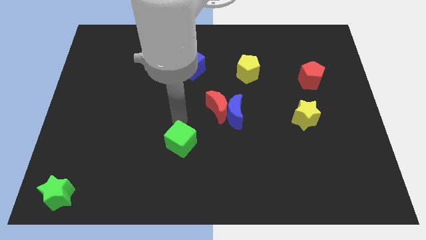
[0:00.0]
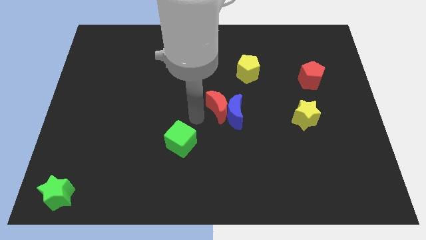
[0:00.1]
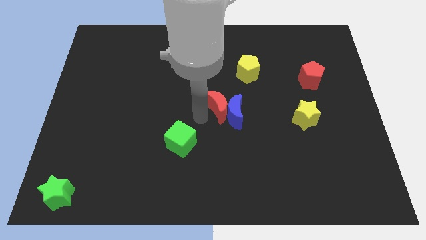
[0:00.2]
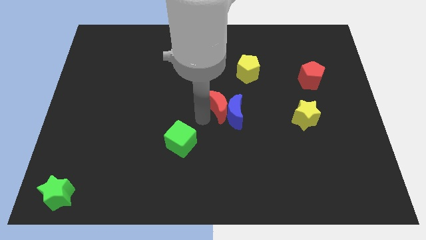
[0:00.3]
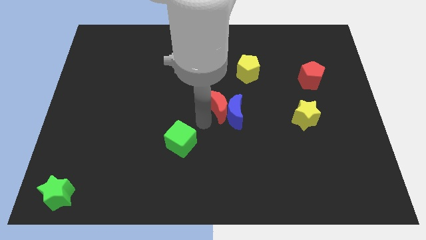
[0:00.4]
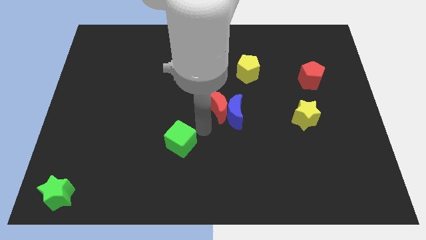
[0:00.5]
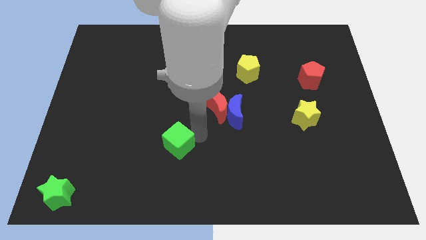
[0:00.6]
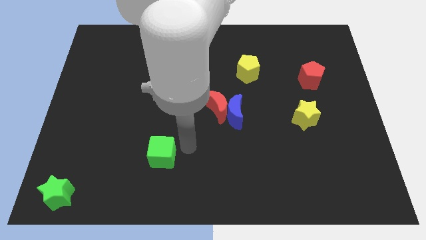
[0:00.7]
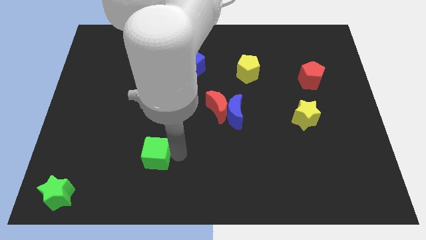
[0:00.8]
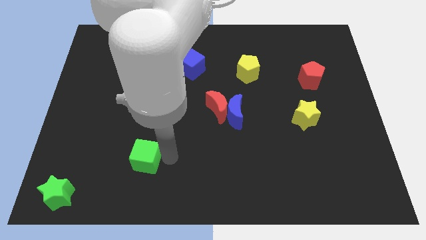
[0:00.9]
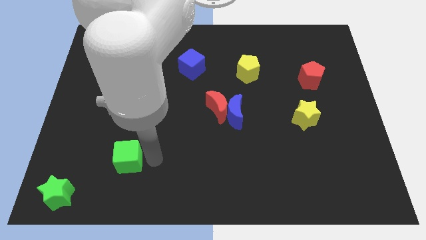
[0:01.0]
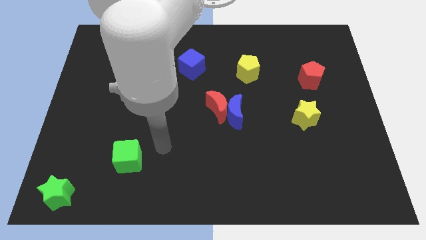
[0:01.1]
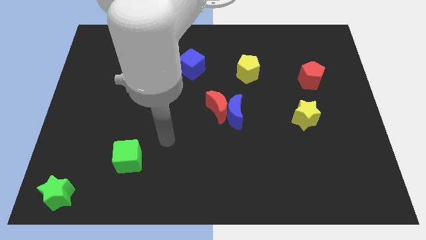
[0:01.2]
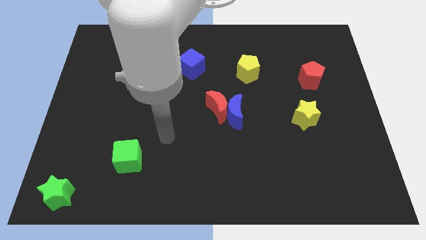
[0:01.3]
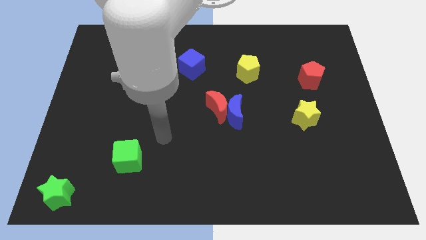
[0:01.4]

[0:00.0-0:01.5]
push the green cube diagonal to green star

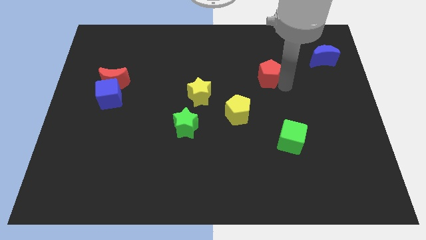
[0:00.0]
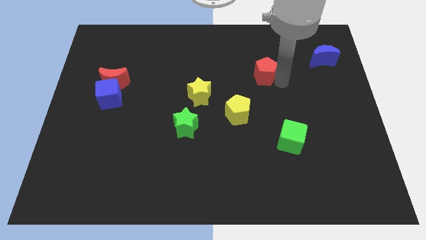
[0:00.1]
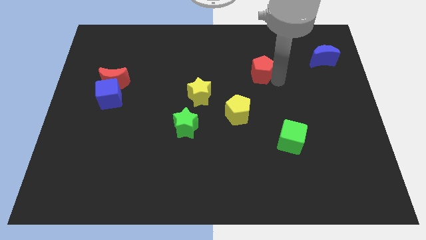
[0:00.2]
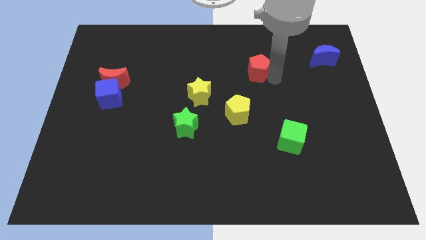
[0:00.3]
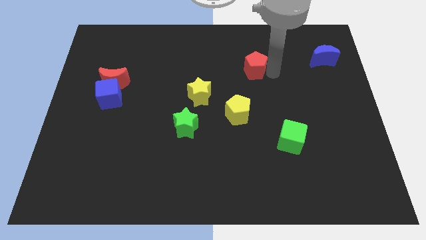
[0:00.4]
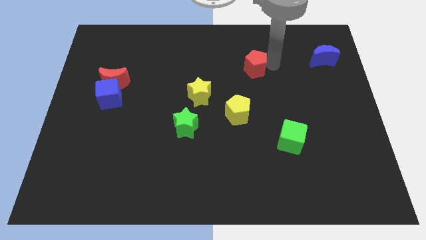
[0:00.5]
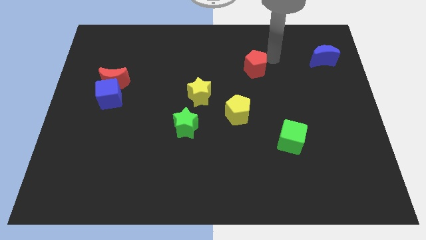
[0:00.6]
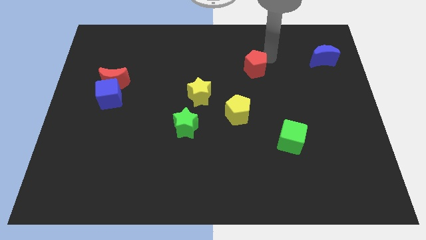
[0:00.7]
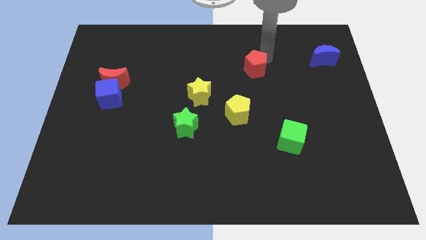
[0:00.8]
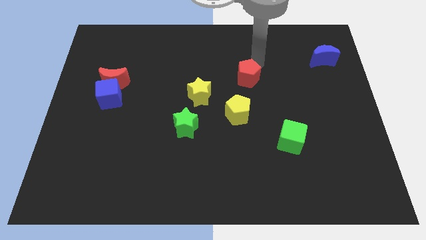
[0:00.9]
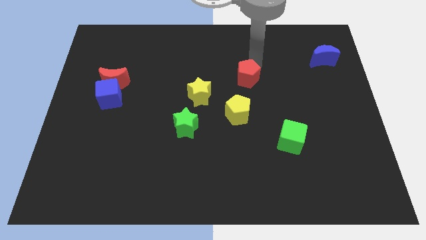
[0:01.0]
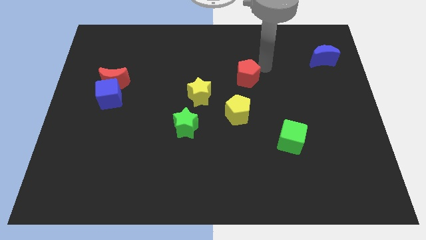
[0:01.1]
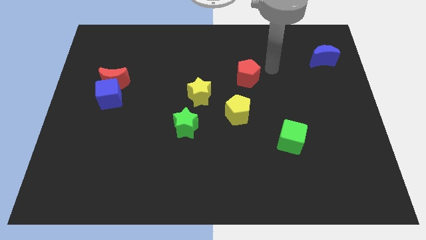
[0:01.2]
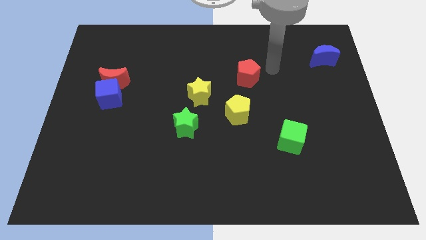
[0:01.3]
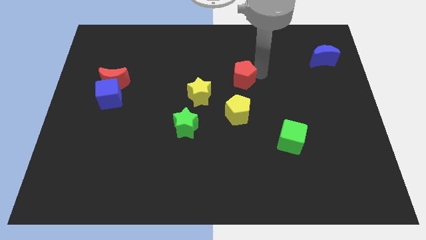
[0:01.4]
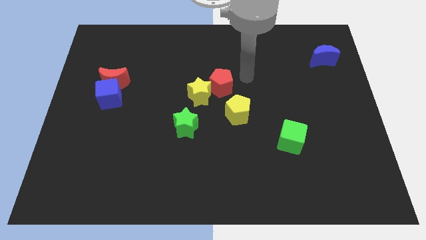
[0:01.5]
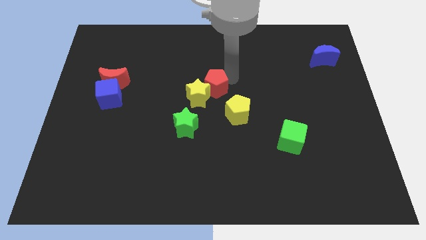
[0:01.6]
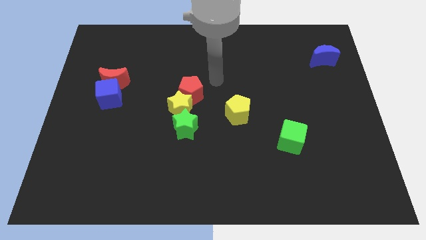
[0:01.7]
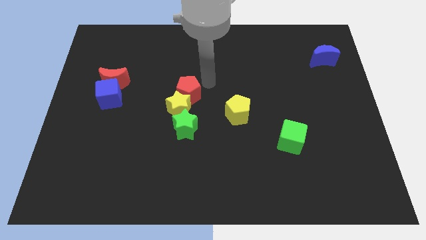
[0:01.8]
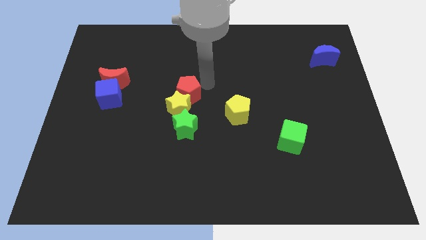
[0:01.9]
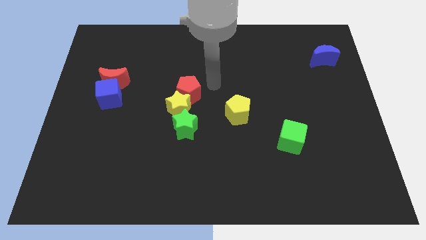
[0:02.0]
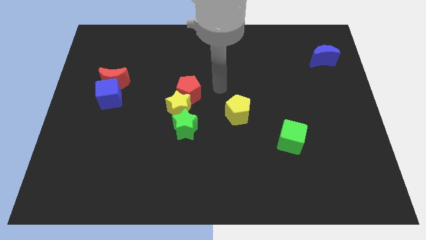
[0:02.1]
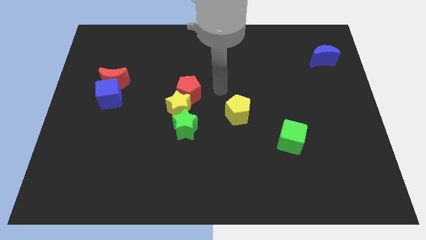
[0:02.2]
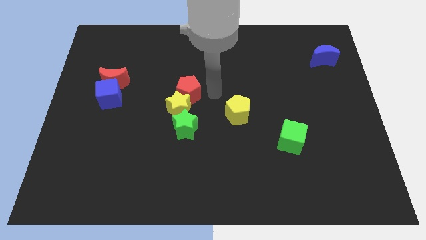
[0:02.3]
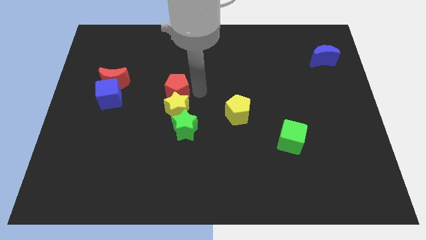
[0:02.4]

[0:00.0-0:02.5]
push red pentagon above yellow star

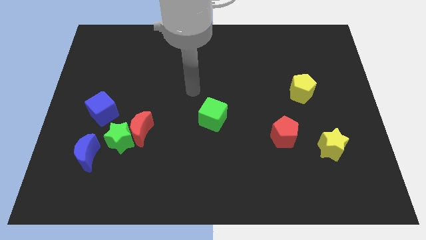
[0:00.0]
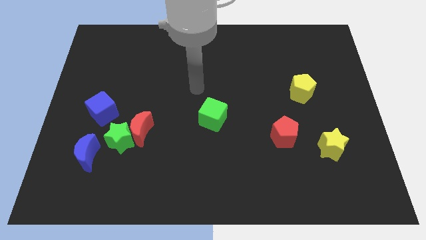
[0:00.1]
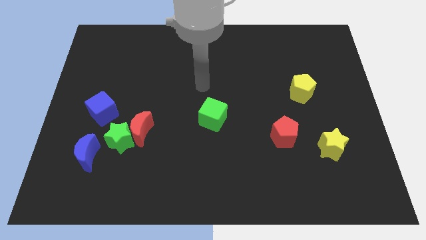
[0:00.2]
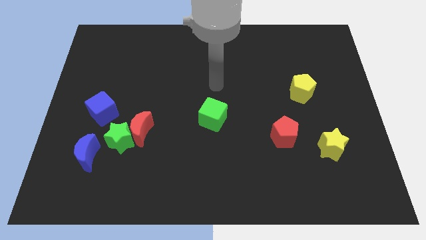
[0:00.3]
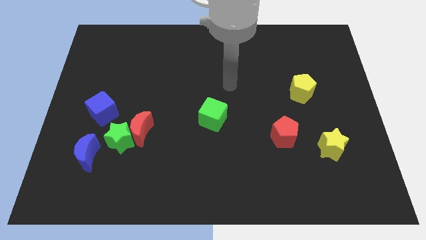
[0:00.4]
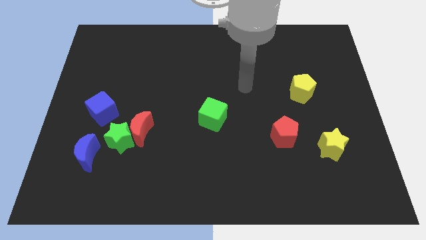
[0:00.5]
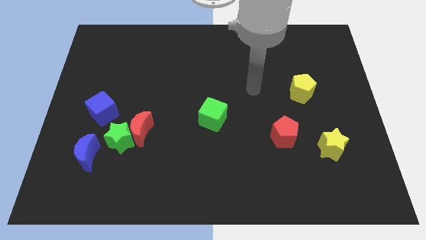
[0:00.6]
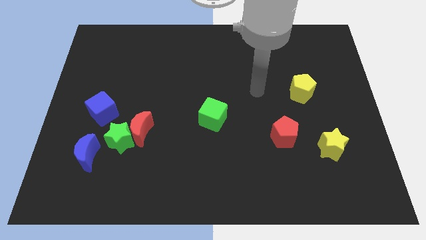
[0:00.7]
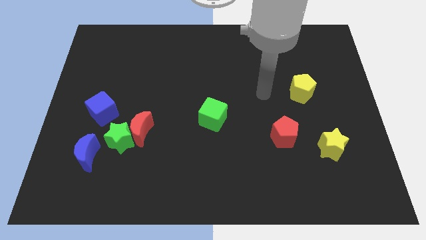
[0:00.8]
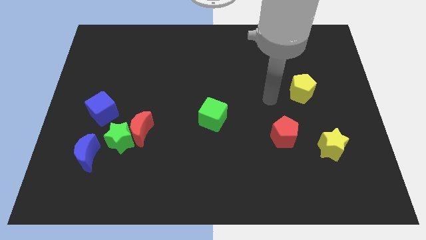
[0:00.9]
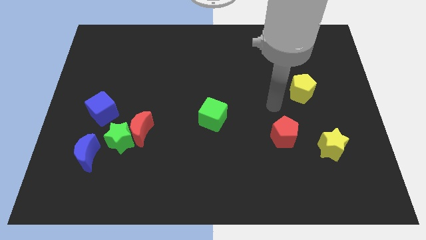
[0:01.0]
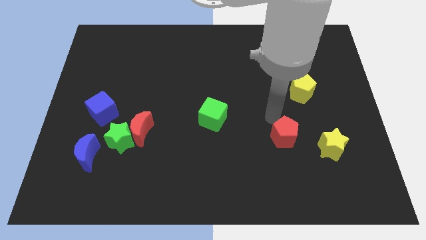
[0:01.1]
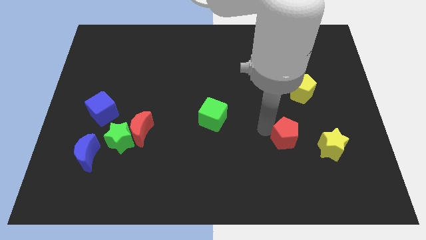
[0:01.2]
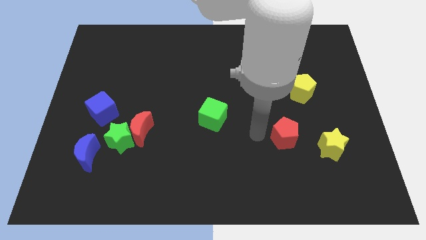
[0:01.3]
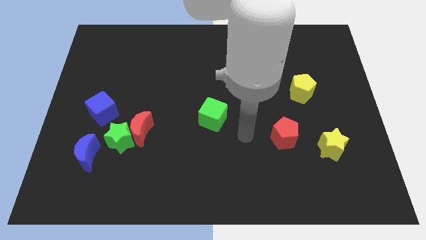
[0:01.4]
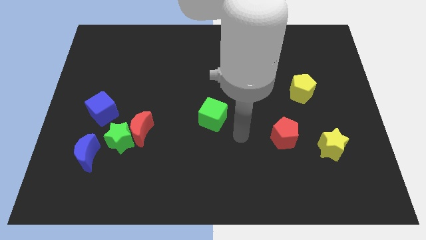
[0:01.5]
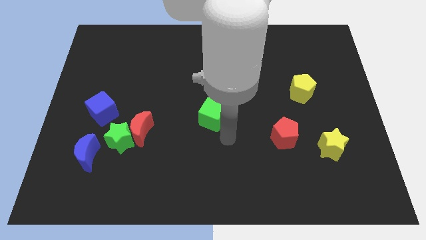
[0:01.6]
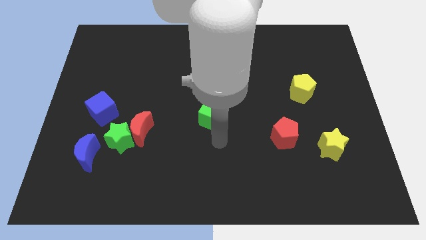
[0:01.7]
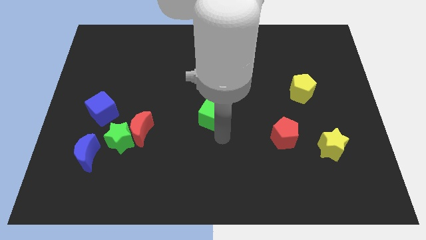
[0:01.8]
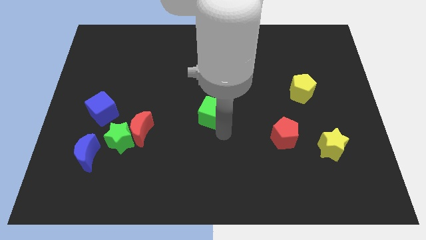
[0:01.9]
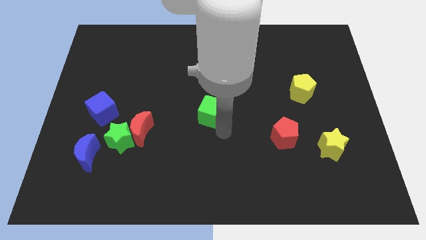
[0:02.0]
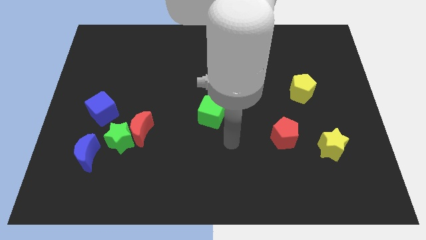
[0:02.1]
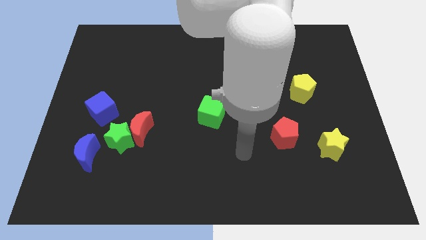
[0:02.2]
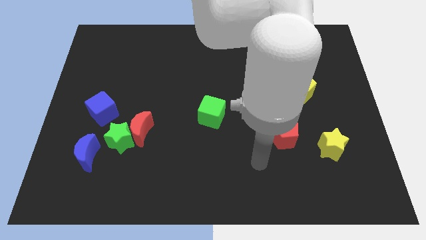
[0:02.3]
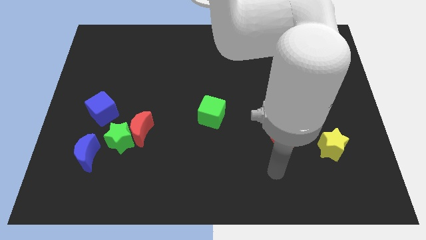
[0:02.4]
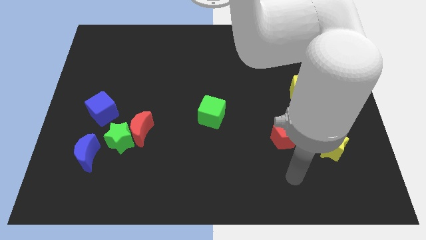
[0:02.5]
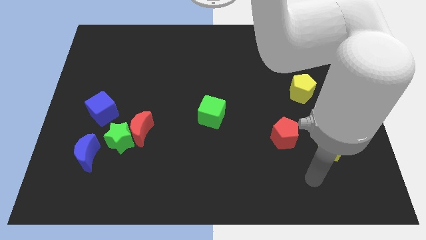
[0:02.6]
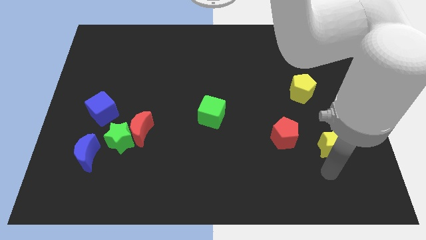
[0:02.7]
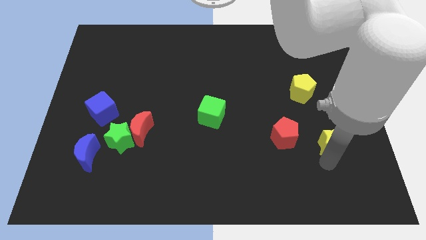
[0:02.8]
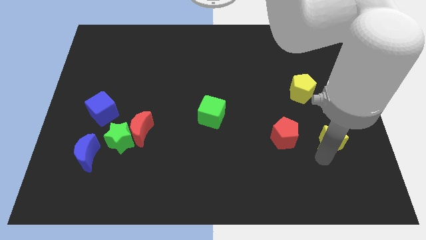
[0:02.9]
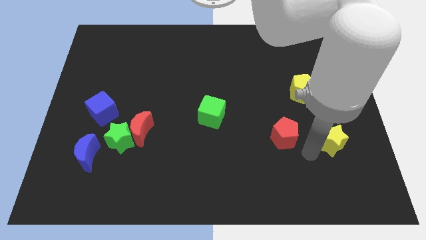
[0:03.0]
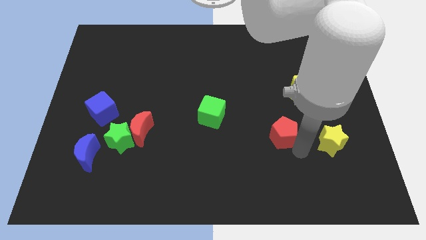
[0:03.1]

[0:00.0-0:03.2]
slightly move the yellow star up

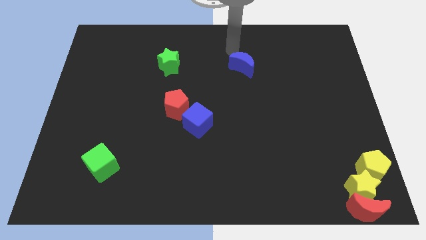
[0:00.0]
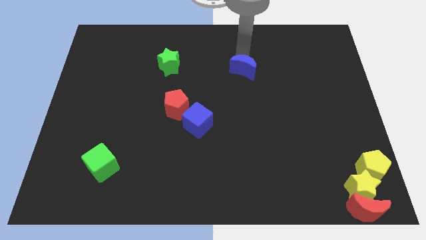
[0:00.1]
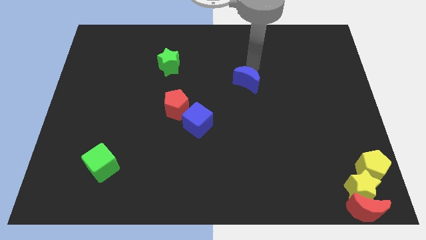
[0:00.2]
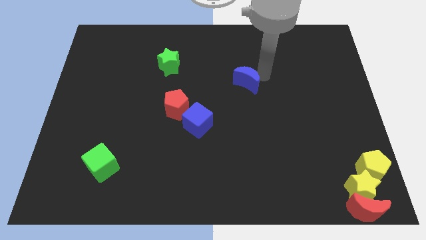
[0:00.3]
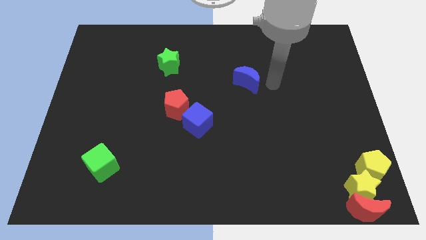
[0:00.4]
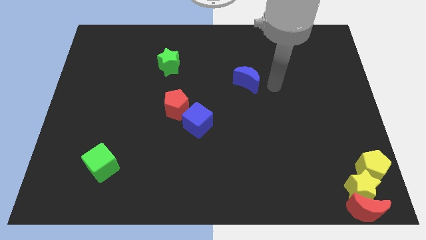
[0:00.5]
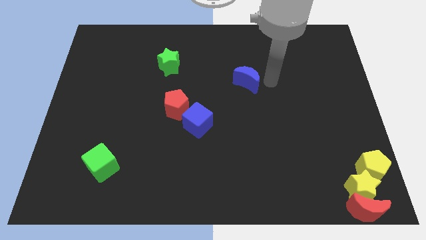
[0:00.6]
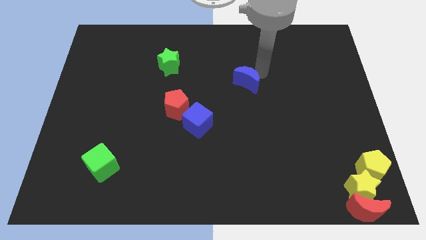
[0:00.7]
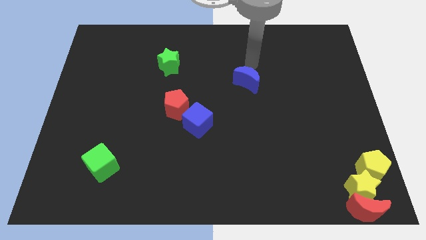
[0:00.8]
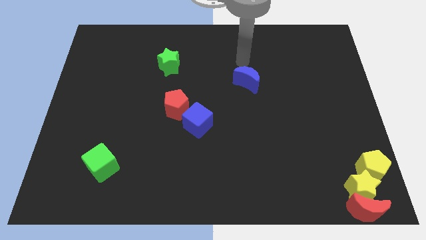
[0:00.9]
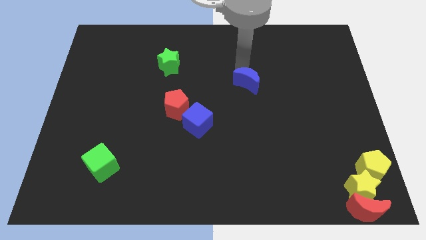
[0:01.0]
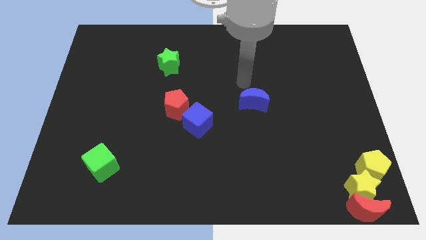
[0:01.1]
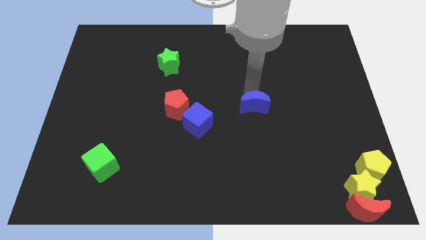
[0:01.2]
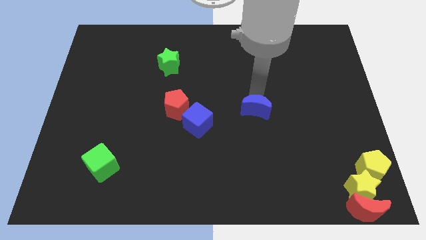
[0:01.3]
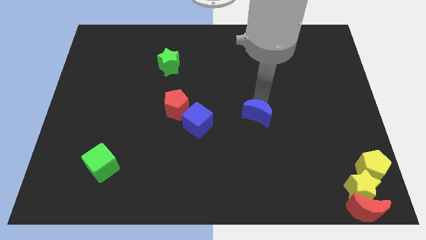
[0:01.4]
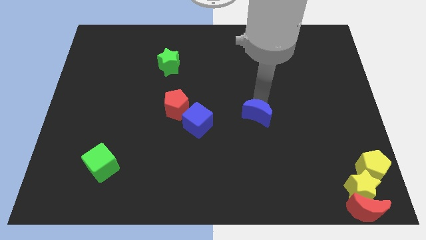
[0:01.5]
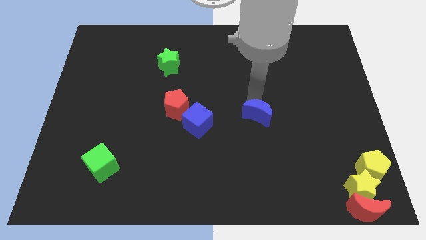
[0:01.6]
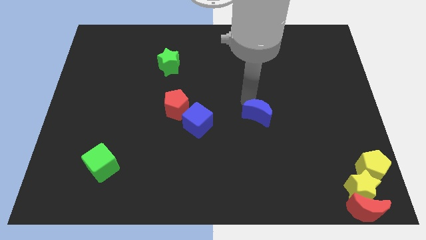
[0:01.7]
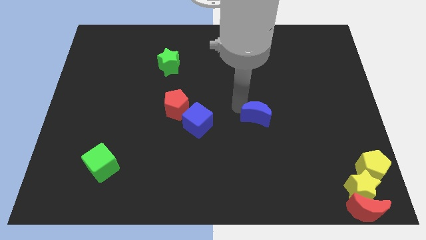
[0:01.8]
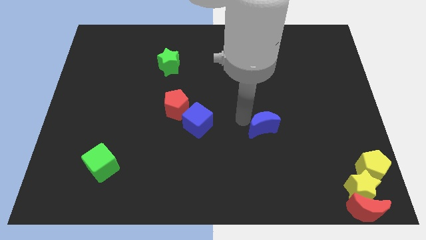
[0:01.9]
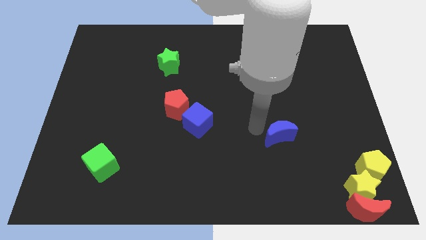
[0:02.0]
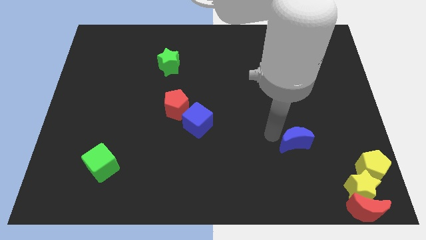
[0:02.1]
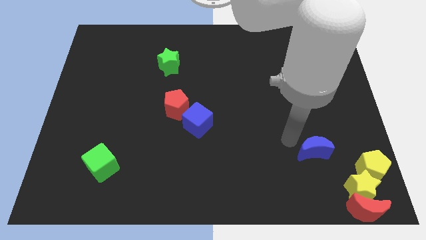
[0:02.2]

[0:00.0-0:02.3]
move your arm away from the blue moon
